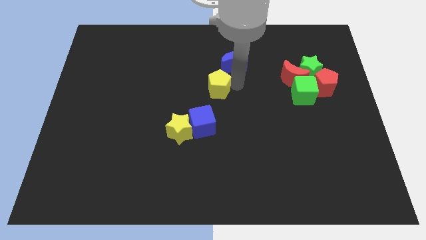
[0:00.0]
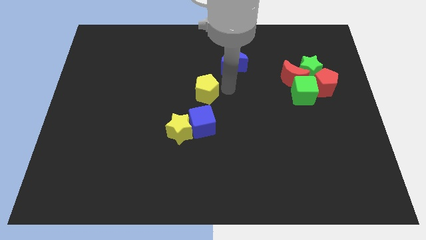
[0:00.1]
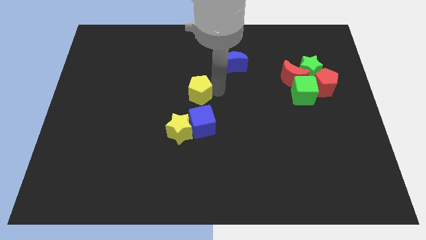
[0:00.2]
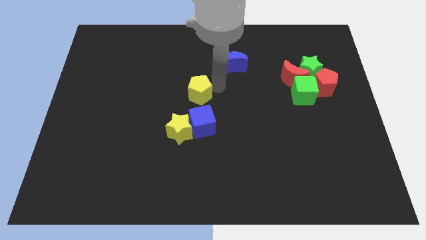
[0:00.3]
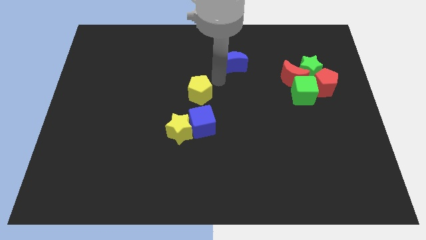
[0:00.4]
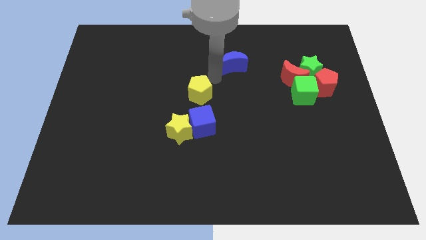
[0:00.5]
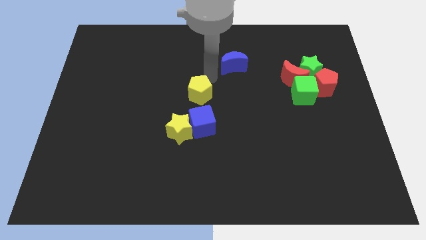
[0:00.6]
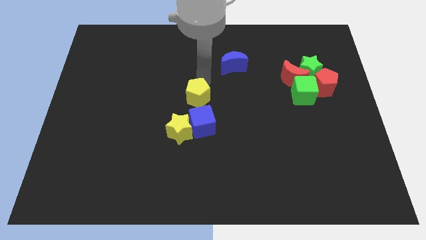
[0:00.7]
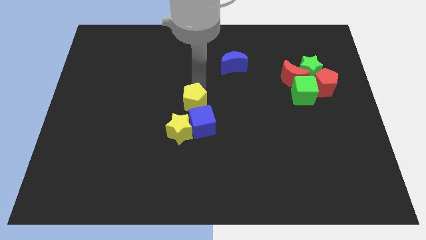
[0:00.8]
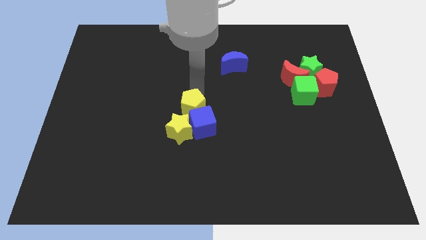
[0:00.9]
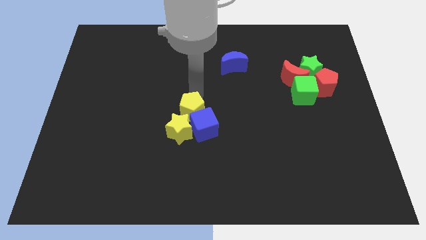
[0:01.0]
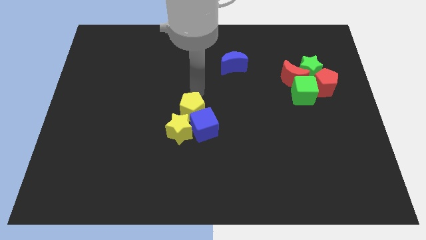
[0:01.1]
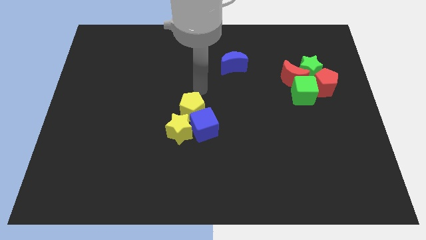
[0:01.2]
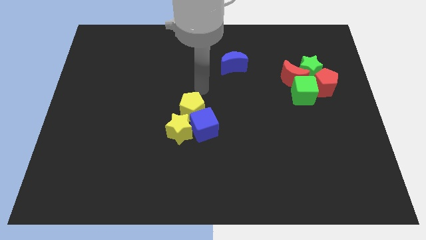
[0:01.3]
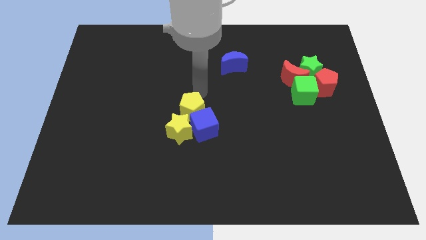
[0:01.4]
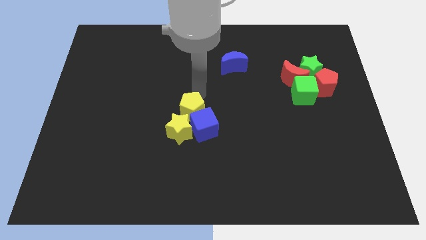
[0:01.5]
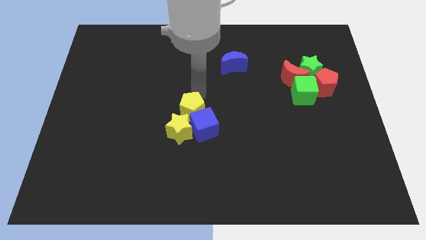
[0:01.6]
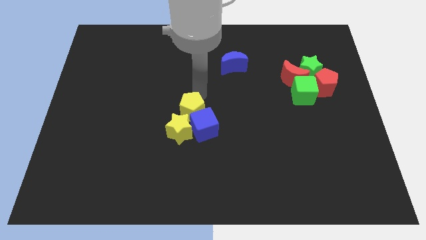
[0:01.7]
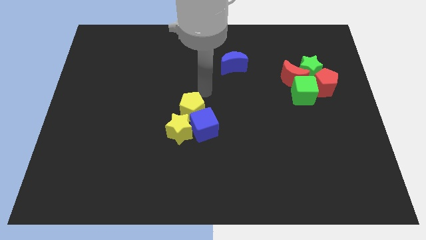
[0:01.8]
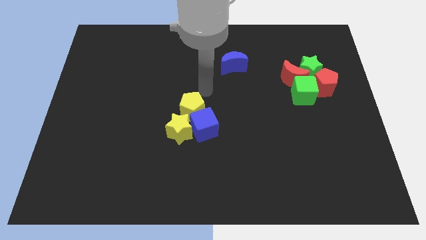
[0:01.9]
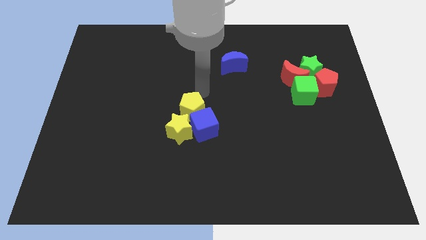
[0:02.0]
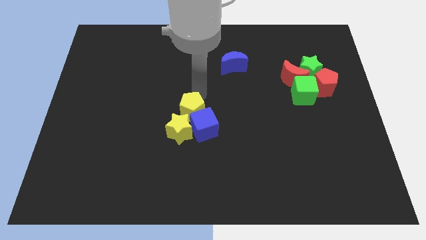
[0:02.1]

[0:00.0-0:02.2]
push yellow pentagon into yellow star and blue cube

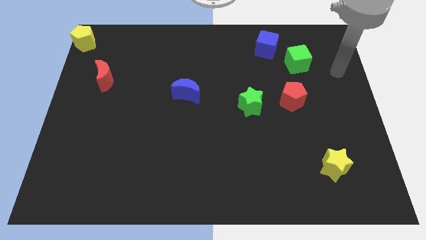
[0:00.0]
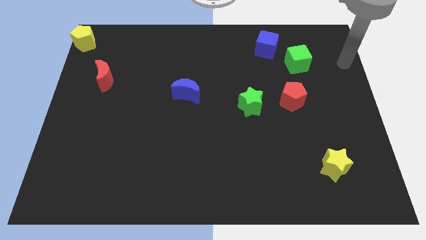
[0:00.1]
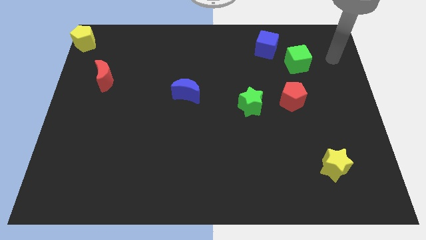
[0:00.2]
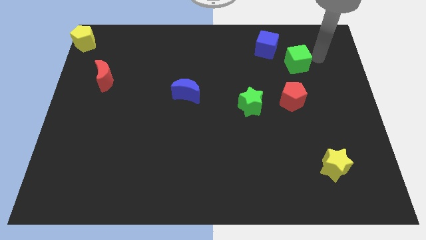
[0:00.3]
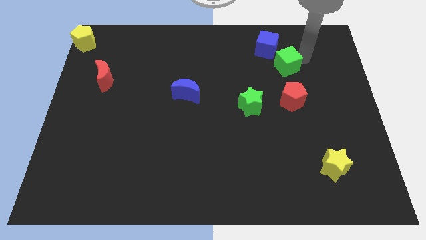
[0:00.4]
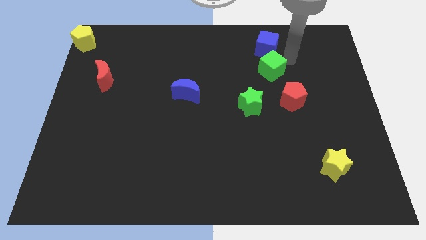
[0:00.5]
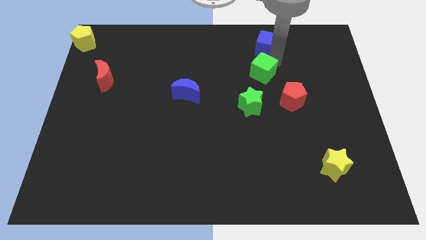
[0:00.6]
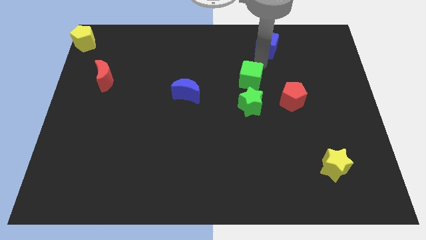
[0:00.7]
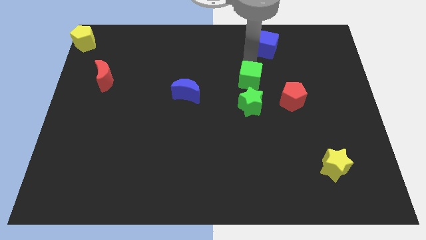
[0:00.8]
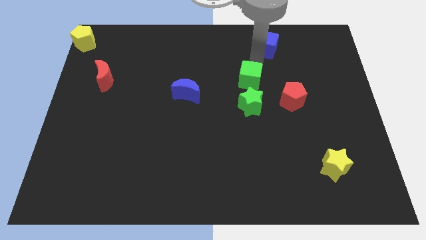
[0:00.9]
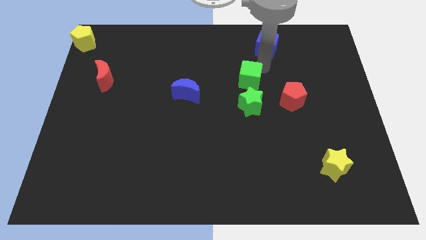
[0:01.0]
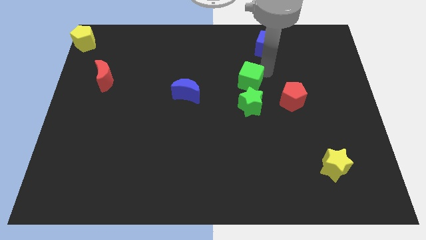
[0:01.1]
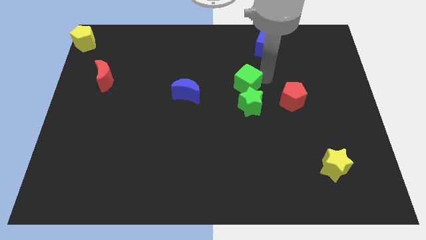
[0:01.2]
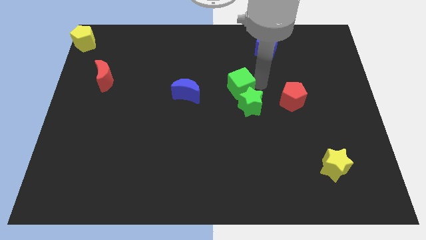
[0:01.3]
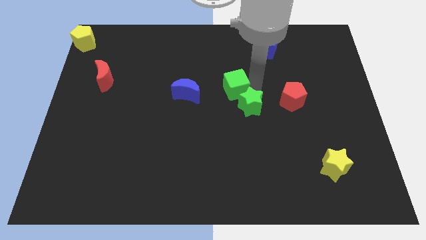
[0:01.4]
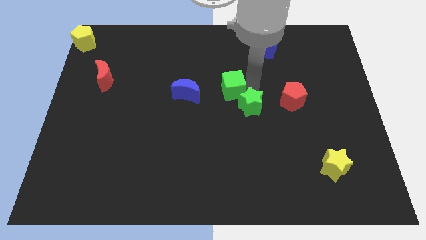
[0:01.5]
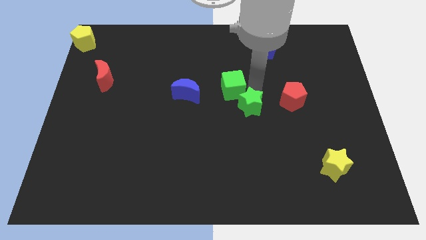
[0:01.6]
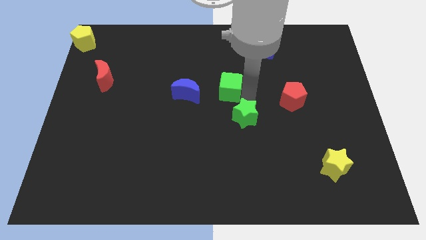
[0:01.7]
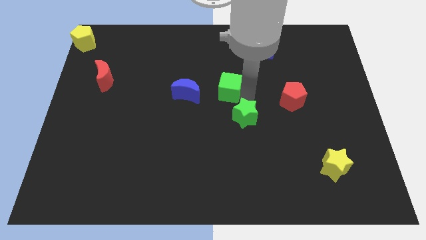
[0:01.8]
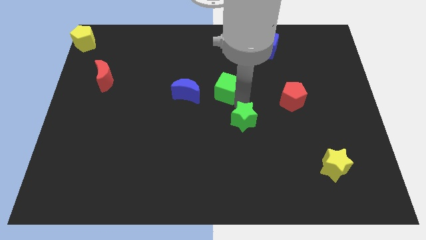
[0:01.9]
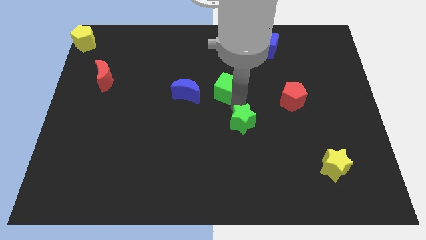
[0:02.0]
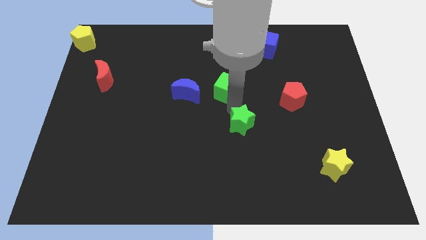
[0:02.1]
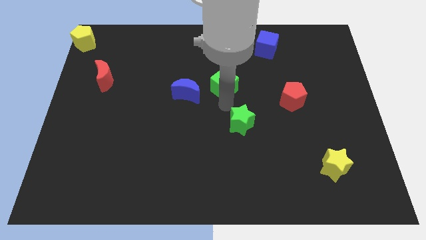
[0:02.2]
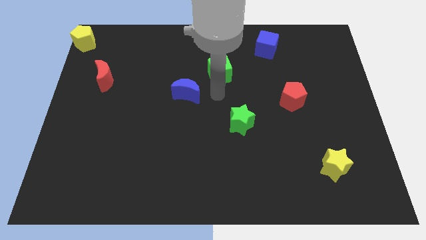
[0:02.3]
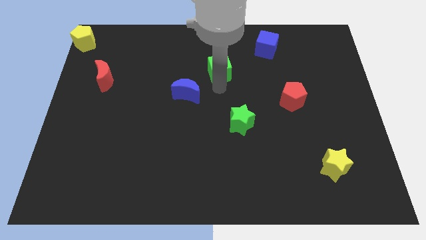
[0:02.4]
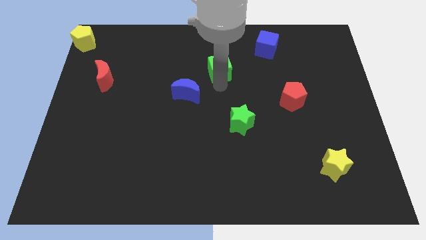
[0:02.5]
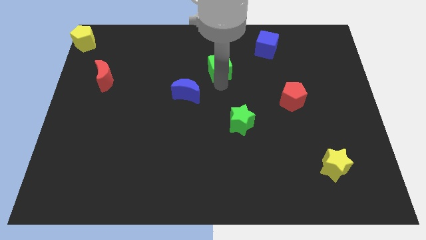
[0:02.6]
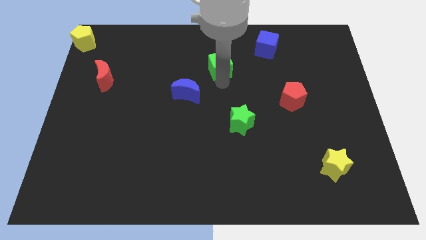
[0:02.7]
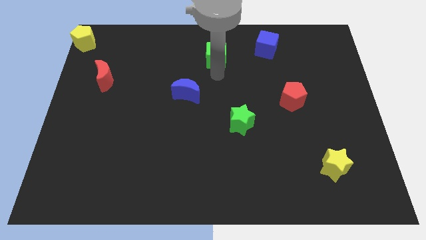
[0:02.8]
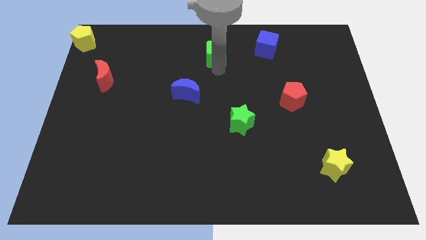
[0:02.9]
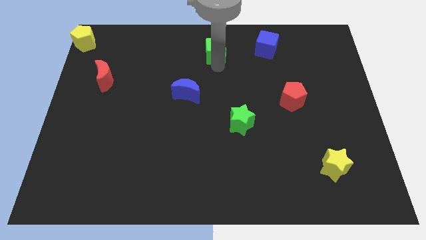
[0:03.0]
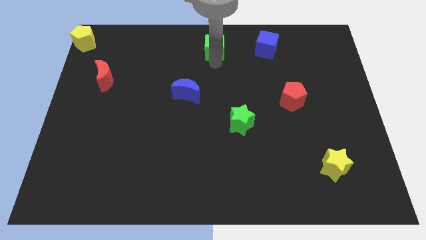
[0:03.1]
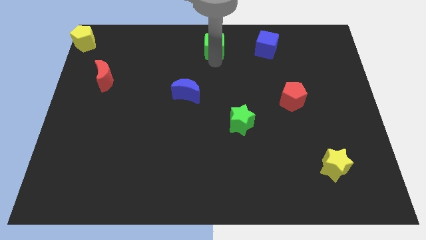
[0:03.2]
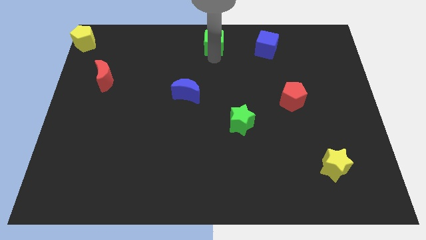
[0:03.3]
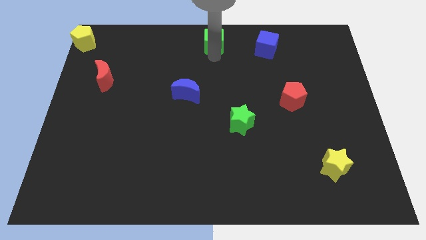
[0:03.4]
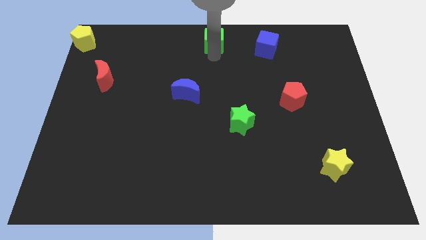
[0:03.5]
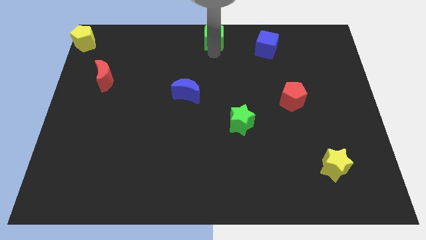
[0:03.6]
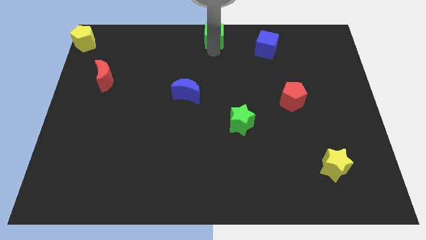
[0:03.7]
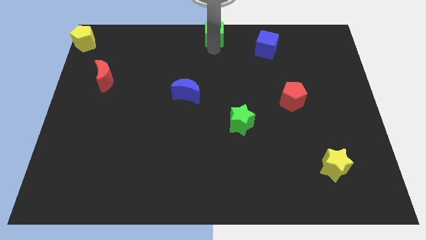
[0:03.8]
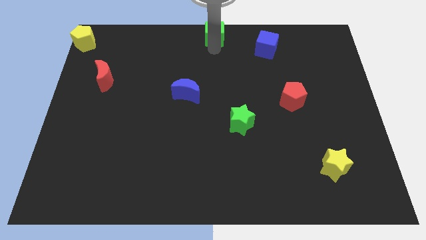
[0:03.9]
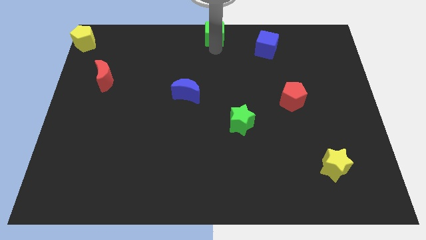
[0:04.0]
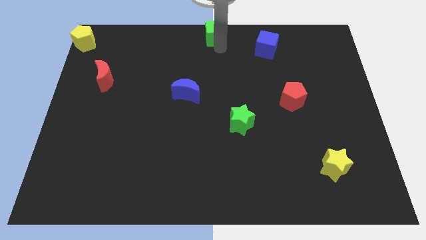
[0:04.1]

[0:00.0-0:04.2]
move the green cube to the top center of the board

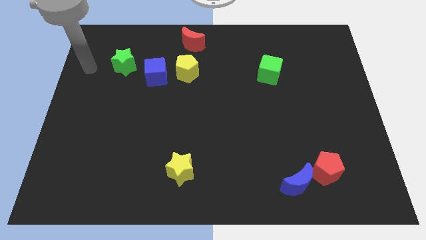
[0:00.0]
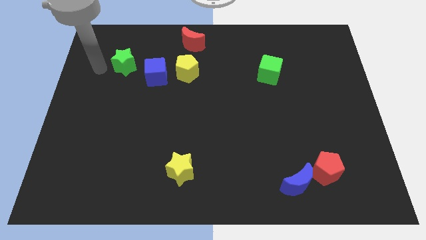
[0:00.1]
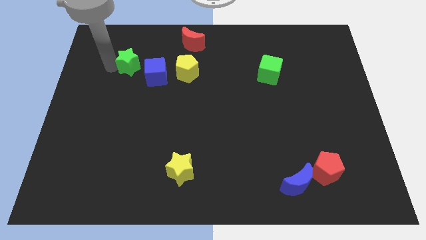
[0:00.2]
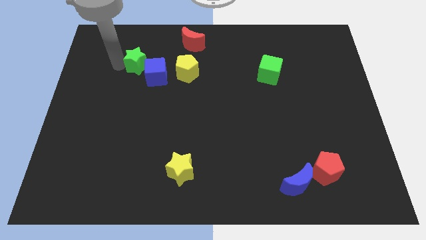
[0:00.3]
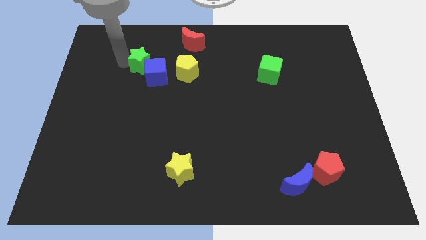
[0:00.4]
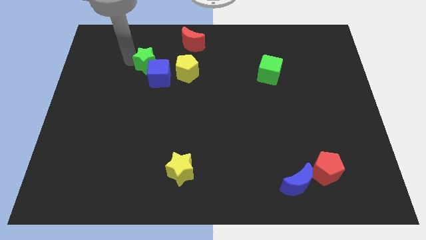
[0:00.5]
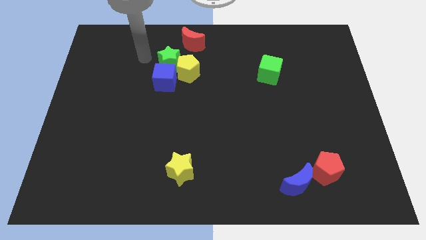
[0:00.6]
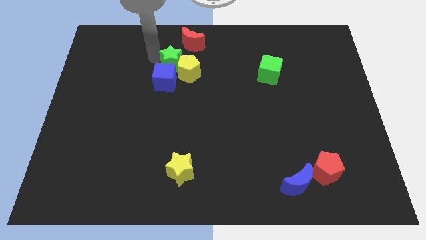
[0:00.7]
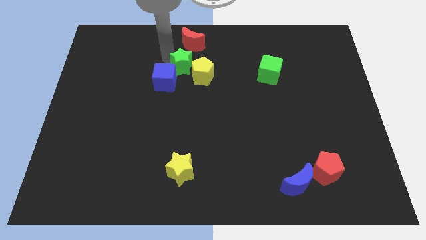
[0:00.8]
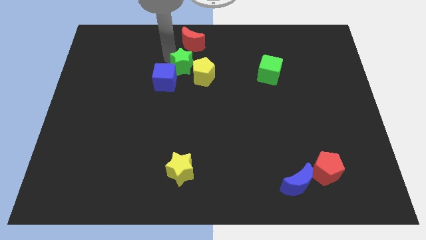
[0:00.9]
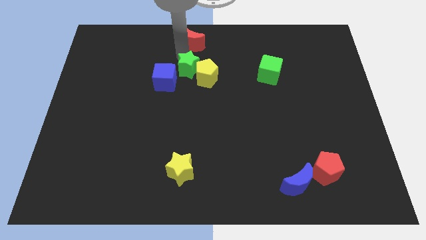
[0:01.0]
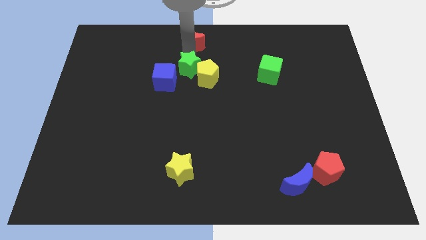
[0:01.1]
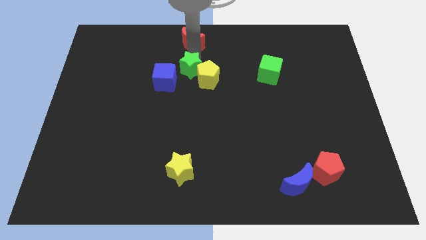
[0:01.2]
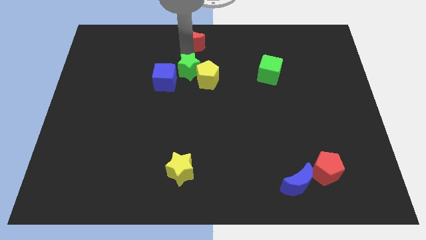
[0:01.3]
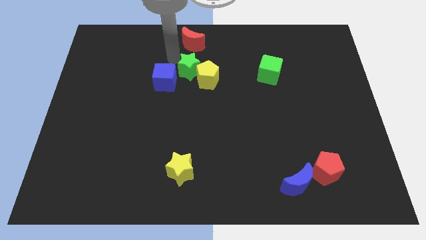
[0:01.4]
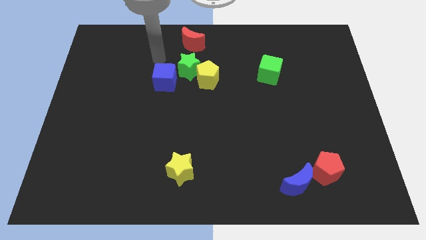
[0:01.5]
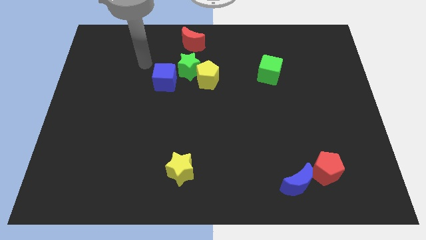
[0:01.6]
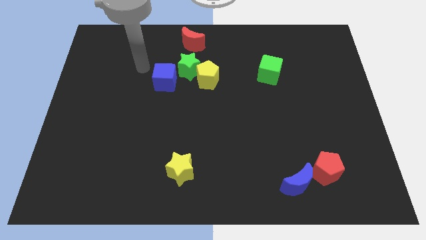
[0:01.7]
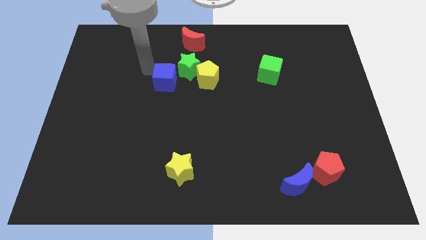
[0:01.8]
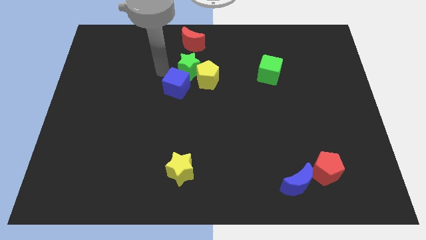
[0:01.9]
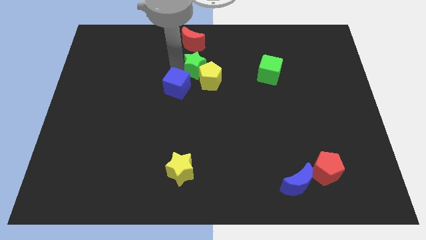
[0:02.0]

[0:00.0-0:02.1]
move the green star close to the yellow pentagon

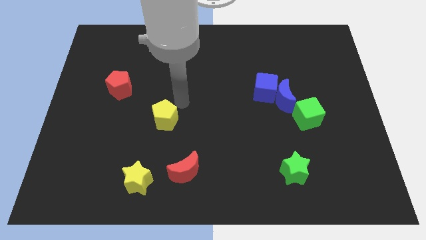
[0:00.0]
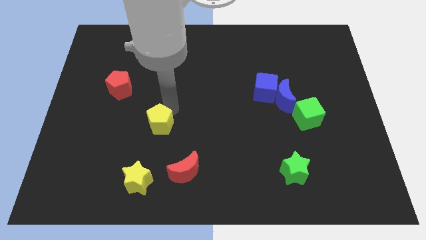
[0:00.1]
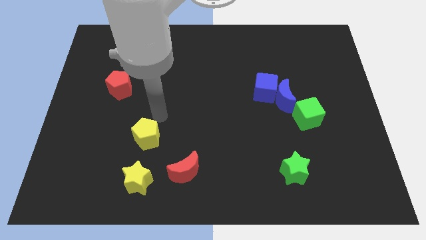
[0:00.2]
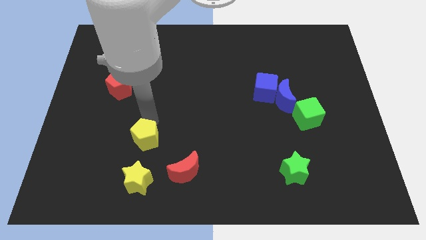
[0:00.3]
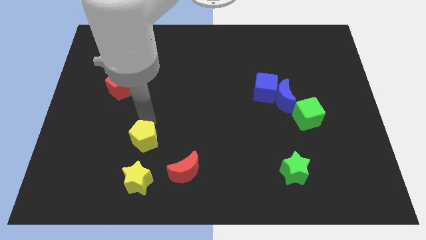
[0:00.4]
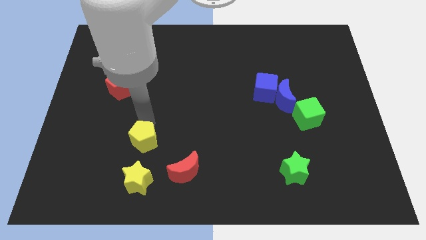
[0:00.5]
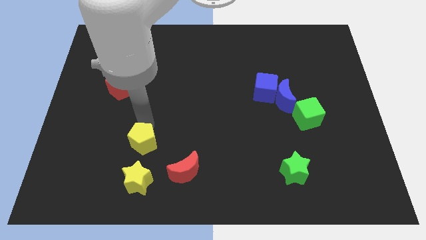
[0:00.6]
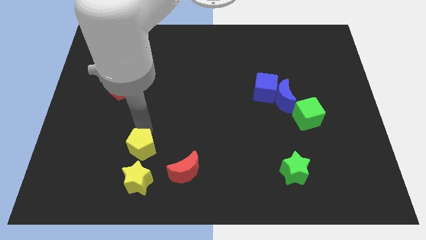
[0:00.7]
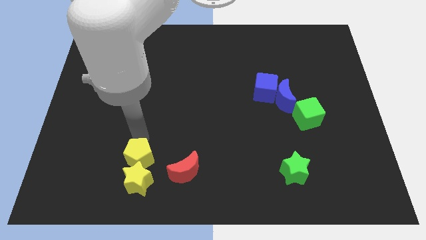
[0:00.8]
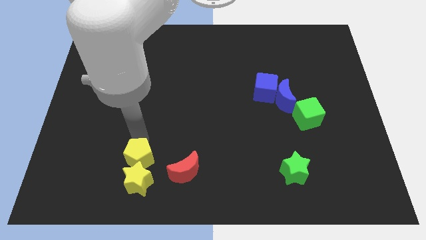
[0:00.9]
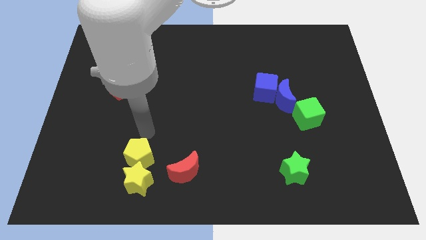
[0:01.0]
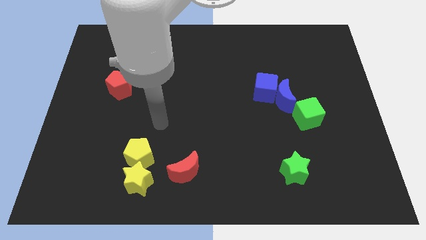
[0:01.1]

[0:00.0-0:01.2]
push yellow pentagon into the yellow star
